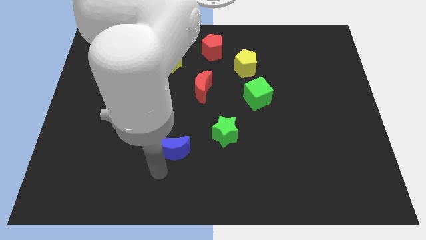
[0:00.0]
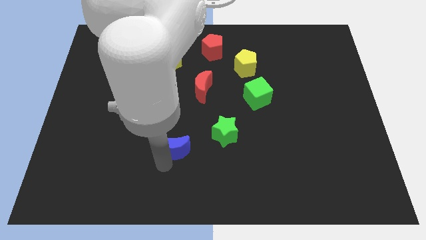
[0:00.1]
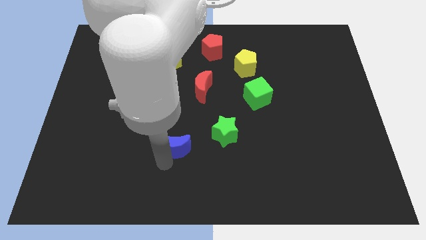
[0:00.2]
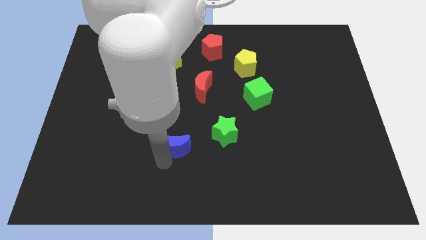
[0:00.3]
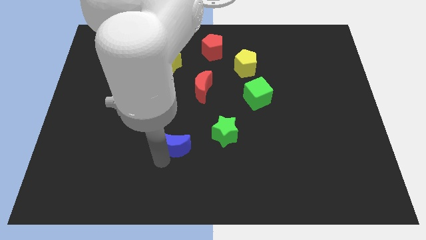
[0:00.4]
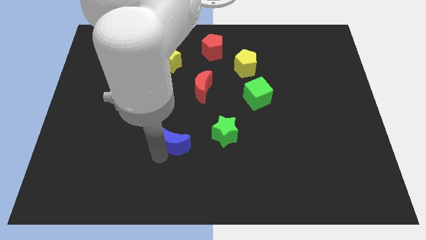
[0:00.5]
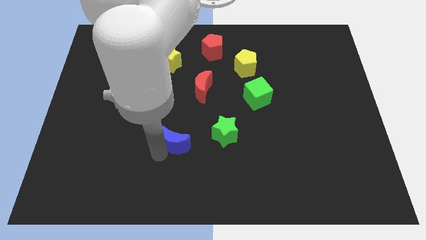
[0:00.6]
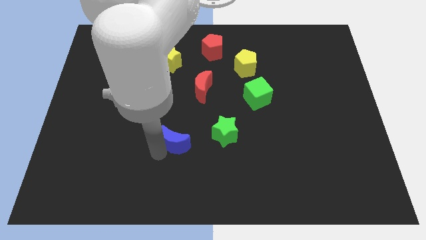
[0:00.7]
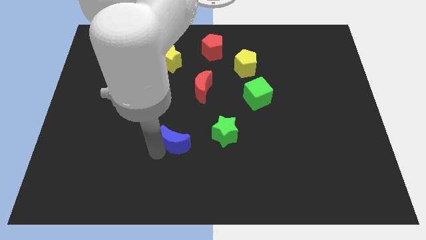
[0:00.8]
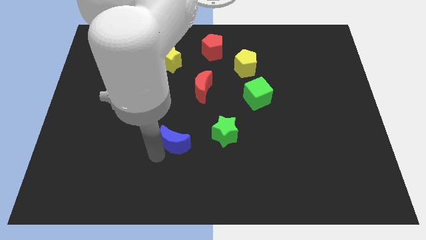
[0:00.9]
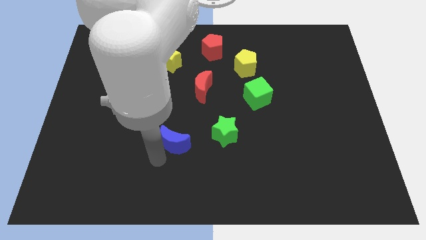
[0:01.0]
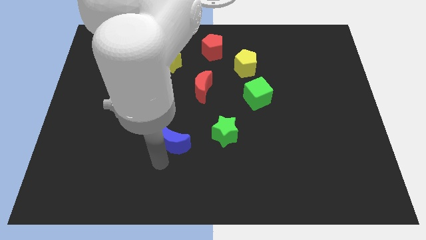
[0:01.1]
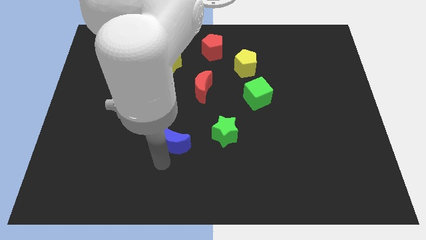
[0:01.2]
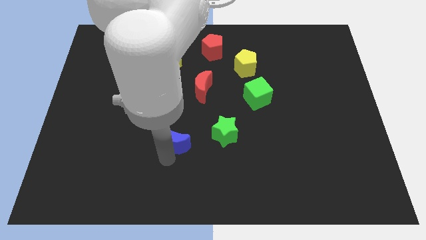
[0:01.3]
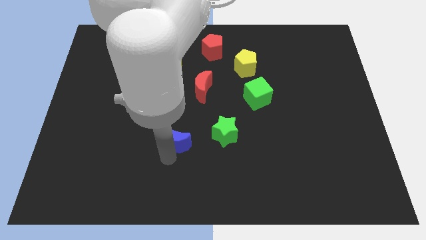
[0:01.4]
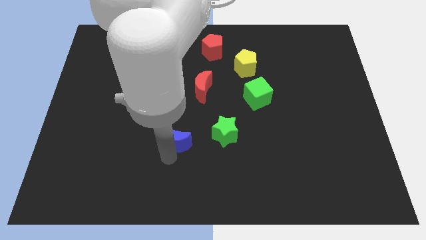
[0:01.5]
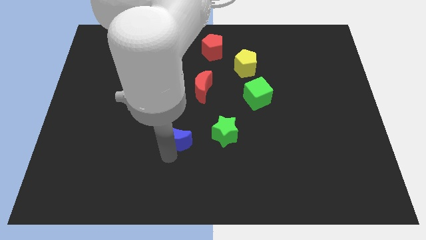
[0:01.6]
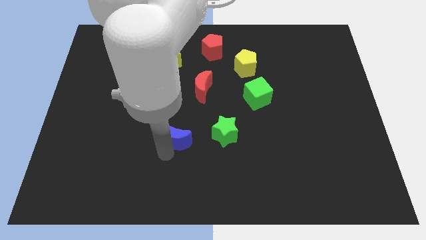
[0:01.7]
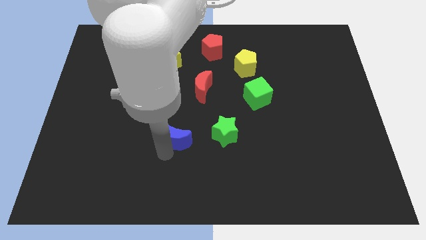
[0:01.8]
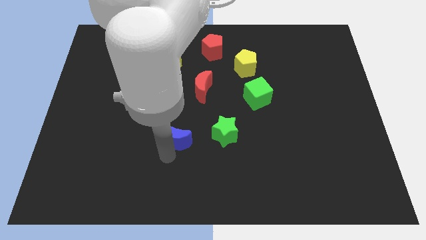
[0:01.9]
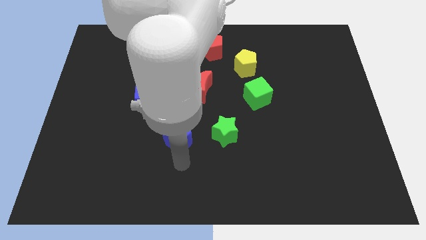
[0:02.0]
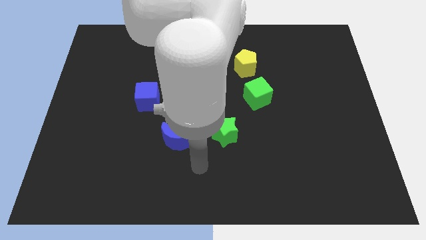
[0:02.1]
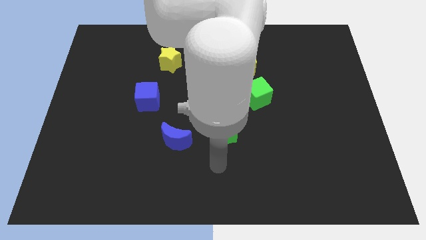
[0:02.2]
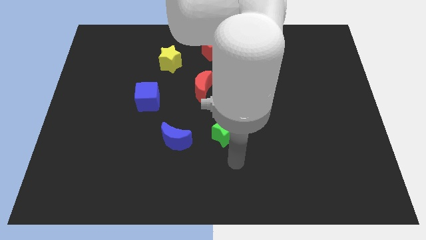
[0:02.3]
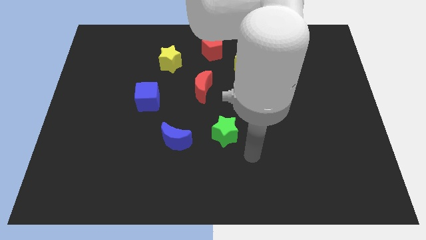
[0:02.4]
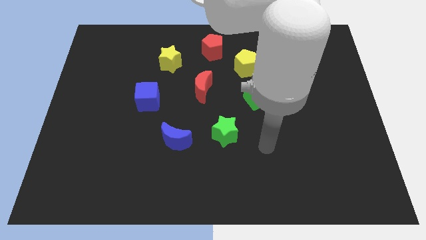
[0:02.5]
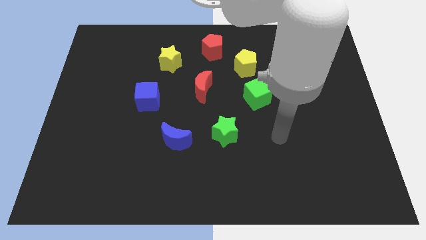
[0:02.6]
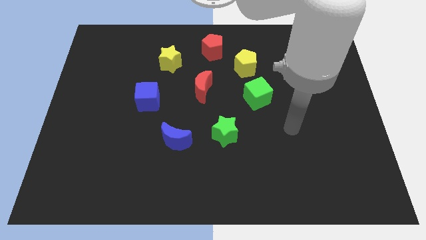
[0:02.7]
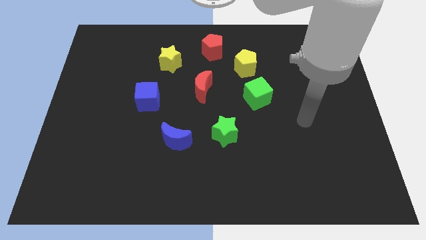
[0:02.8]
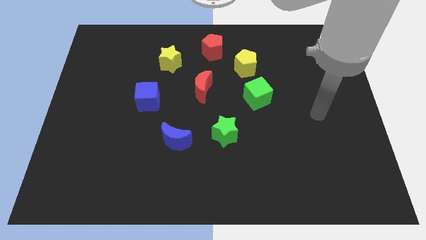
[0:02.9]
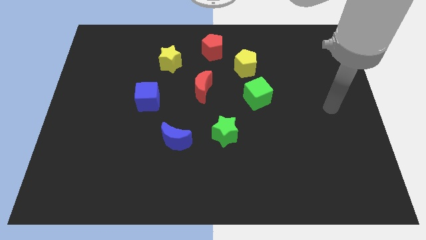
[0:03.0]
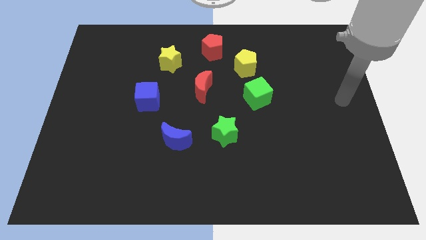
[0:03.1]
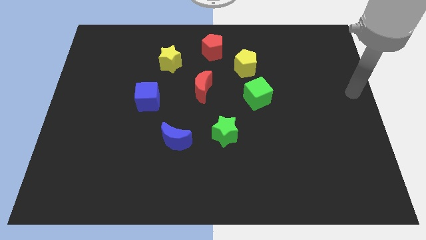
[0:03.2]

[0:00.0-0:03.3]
drag the pointer towards the right side of the board

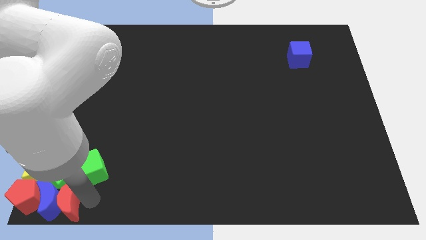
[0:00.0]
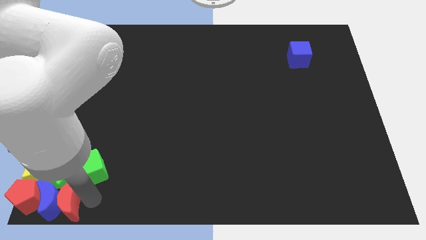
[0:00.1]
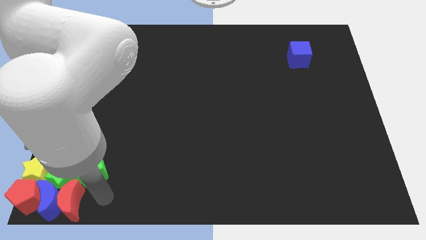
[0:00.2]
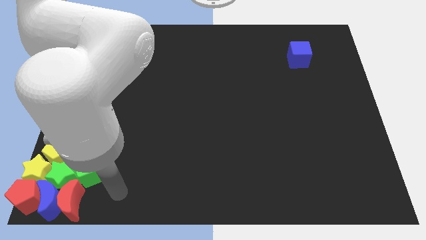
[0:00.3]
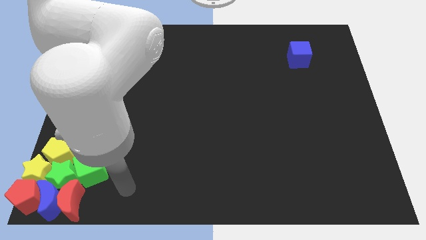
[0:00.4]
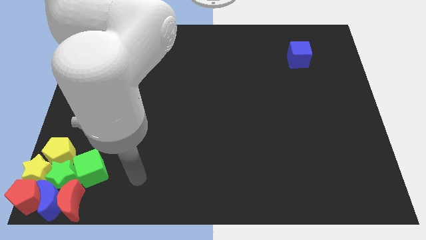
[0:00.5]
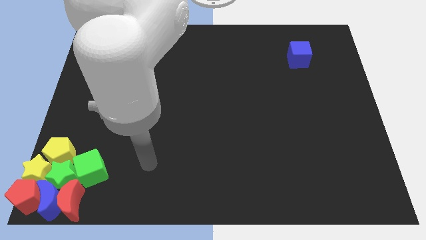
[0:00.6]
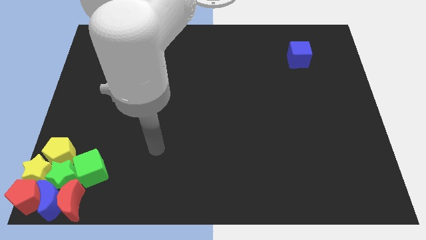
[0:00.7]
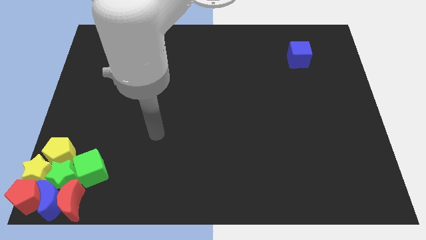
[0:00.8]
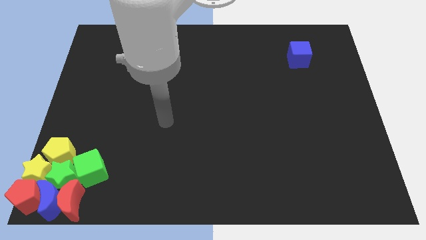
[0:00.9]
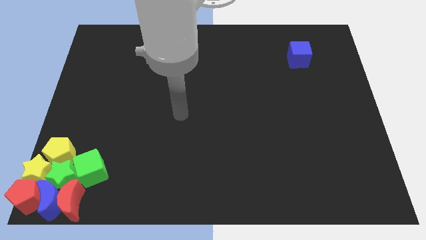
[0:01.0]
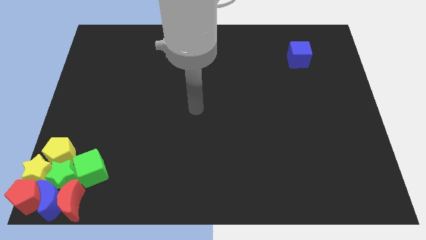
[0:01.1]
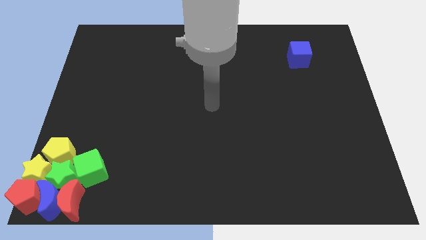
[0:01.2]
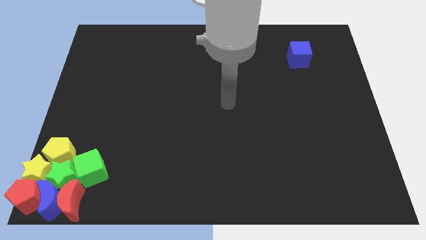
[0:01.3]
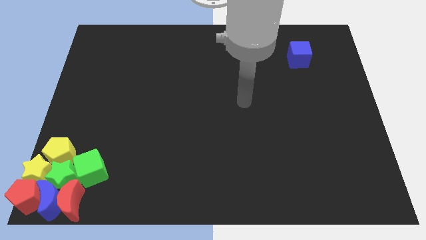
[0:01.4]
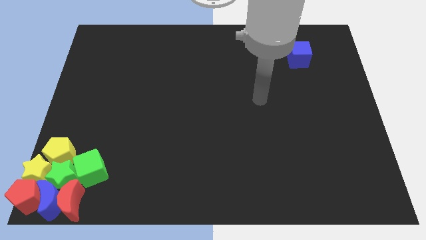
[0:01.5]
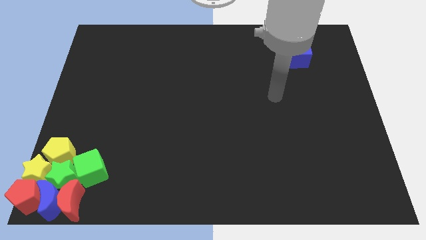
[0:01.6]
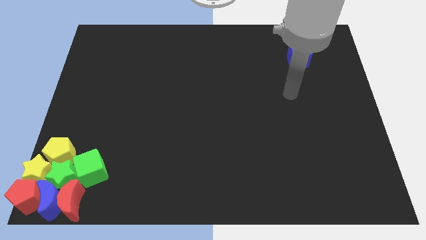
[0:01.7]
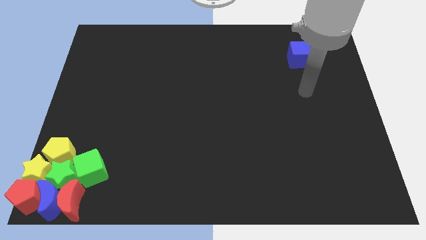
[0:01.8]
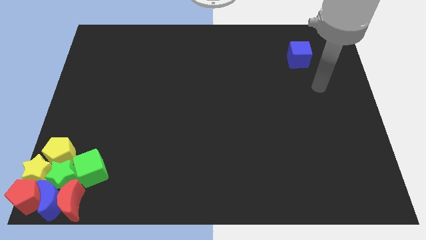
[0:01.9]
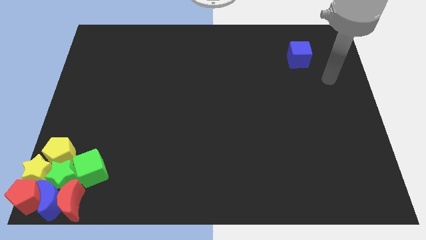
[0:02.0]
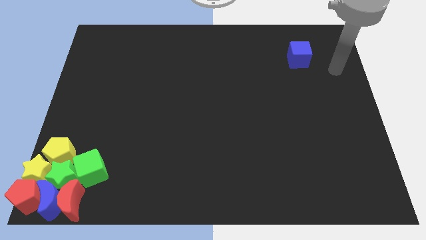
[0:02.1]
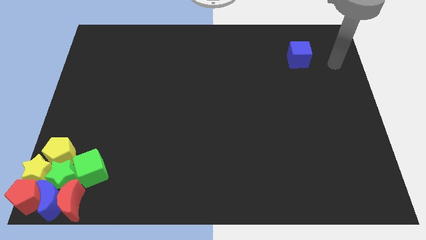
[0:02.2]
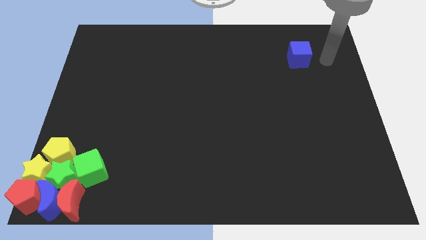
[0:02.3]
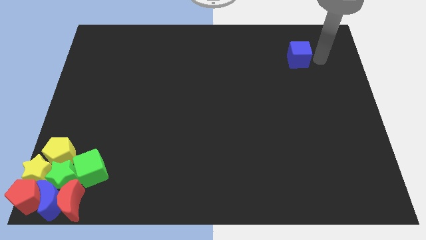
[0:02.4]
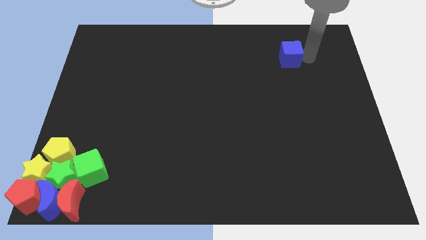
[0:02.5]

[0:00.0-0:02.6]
point your arm to the right side of blue cube

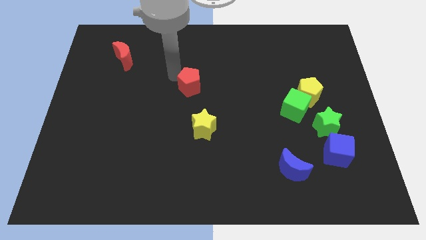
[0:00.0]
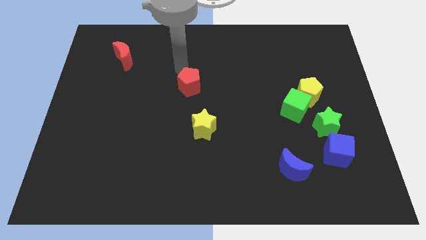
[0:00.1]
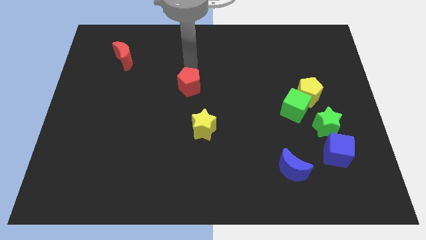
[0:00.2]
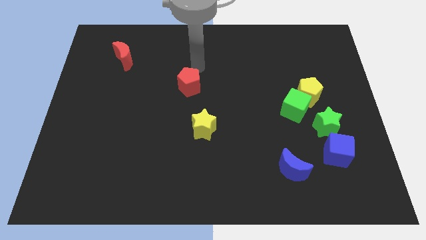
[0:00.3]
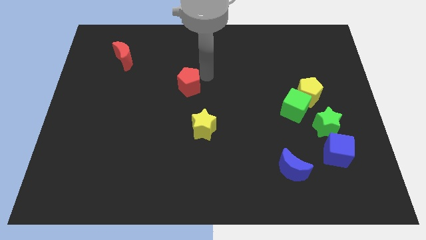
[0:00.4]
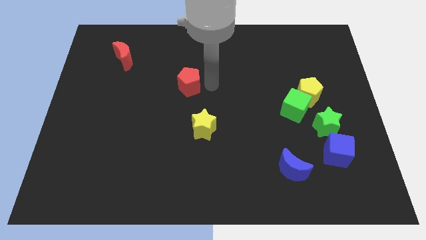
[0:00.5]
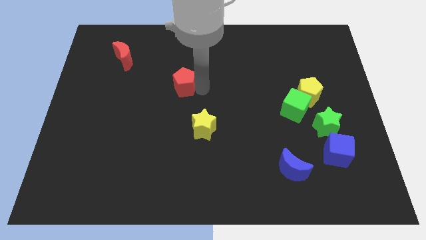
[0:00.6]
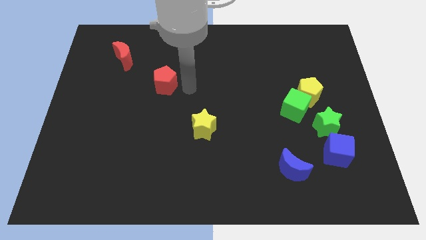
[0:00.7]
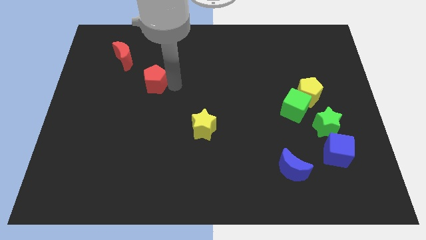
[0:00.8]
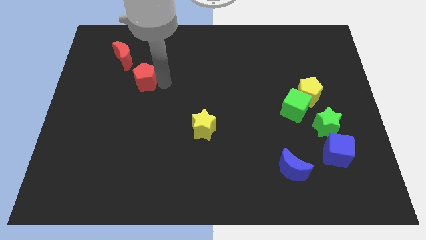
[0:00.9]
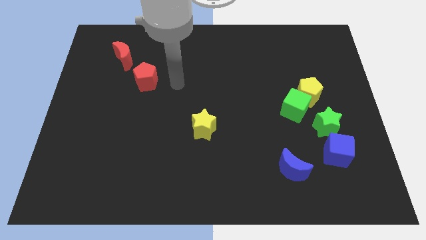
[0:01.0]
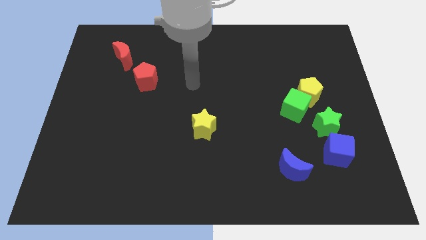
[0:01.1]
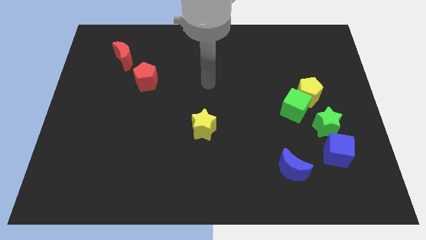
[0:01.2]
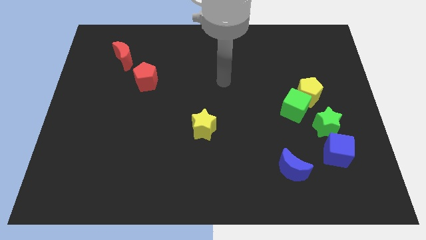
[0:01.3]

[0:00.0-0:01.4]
move red pentagon to the left side

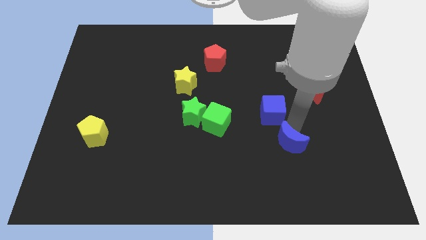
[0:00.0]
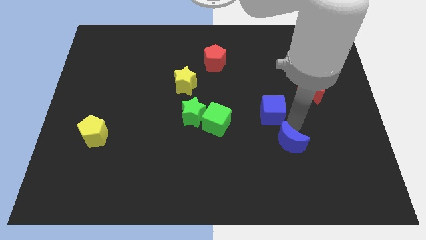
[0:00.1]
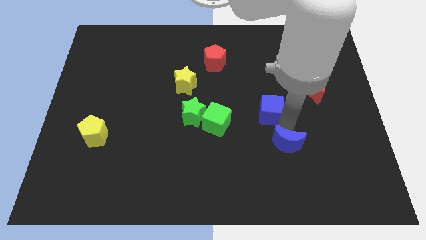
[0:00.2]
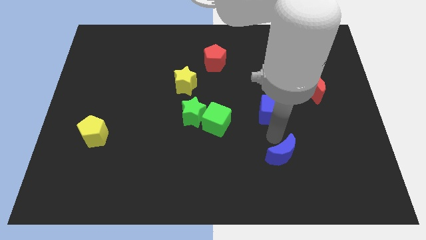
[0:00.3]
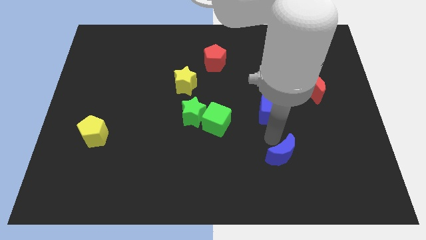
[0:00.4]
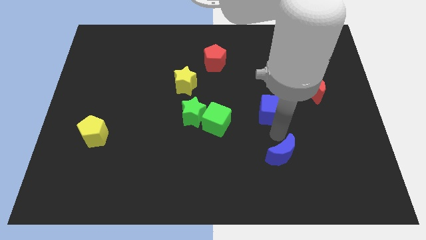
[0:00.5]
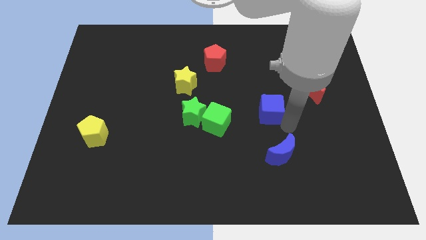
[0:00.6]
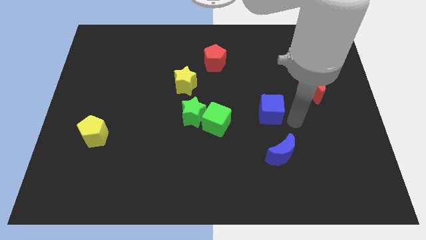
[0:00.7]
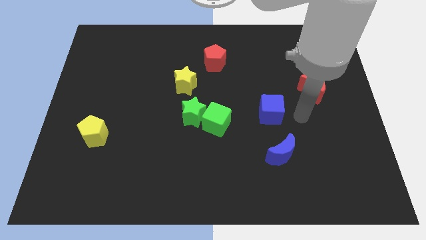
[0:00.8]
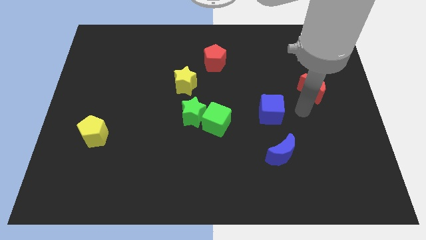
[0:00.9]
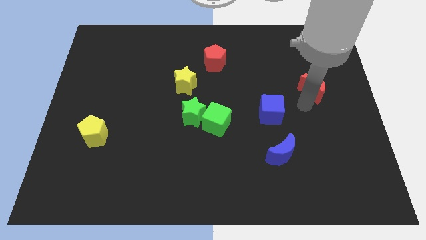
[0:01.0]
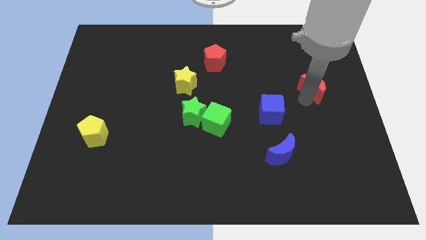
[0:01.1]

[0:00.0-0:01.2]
push the blue moon slightly to the bottom of the board

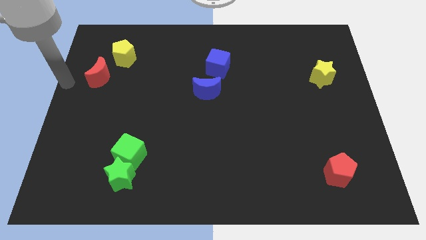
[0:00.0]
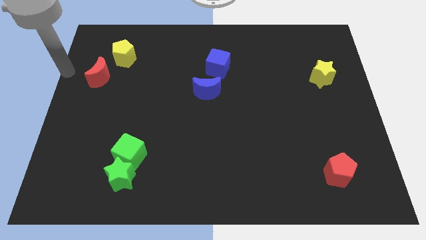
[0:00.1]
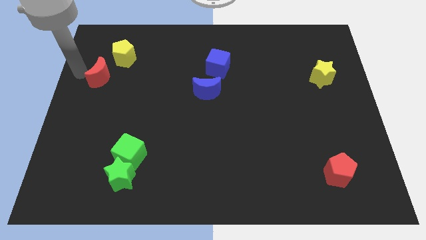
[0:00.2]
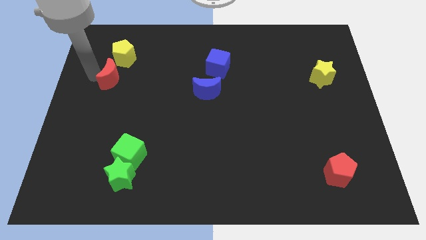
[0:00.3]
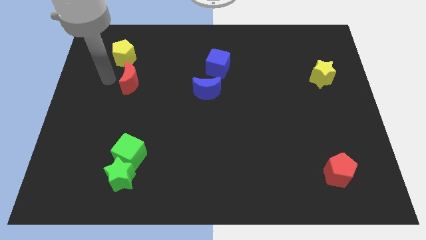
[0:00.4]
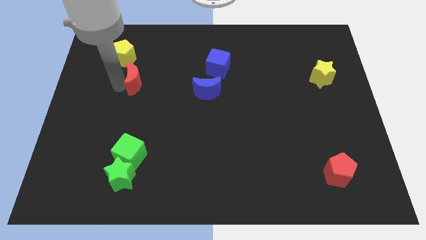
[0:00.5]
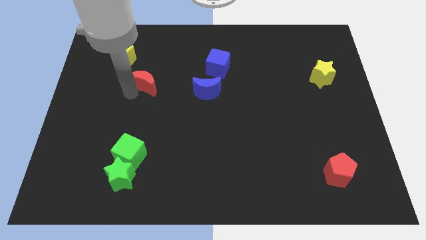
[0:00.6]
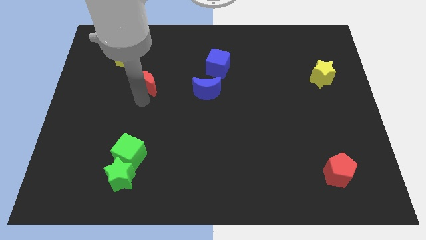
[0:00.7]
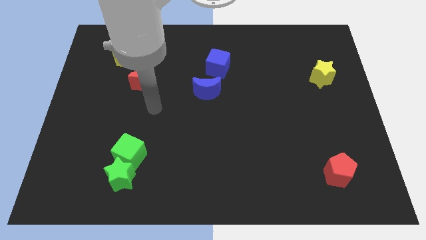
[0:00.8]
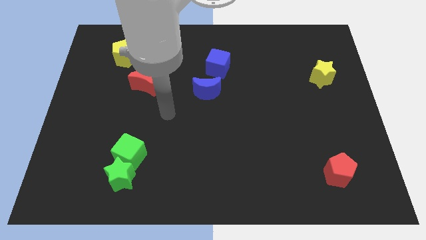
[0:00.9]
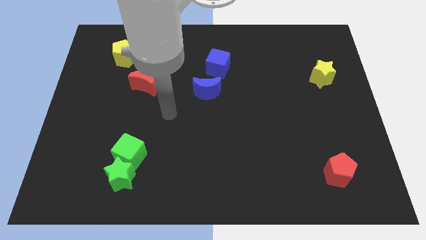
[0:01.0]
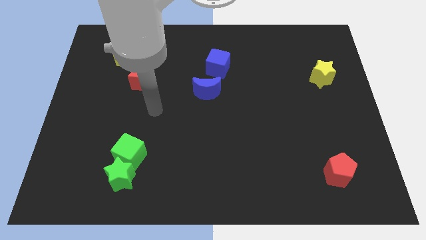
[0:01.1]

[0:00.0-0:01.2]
place the red moon parallel to blue moon
